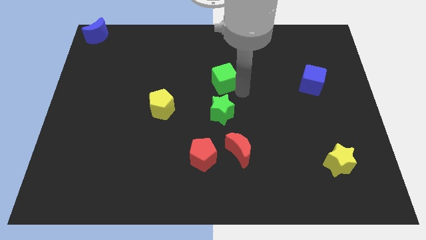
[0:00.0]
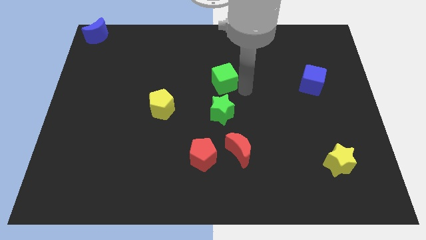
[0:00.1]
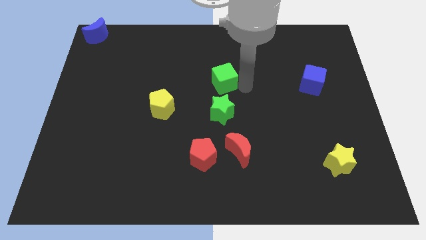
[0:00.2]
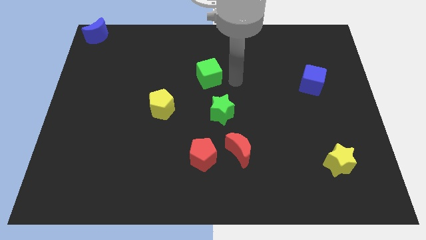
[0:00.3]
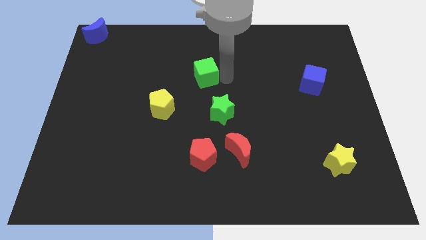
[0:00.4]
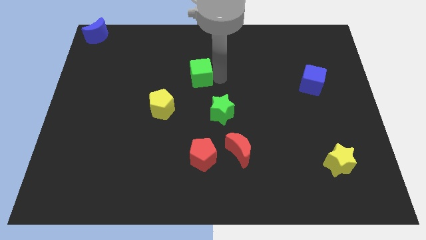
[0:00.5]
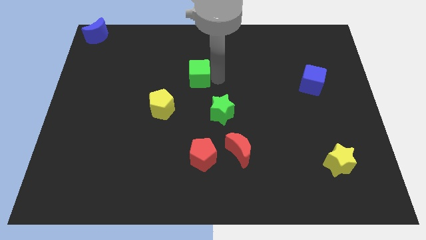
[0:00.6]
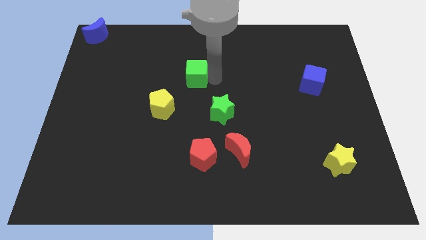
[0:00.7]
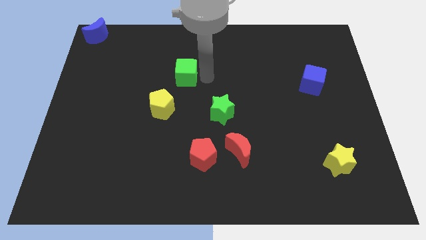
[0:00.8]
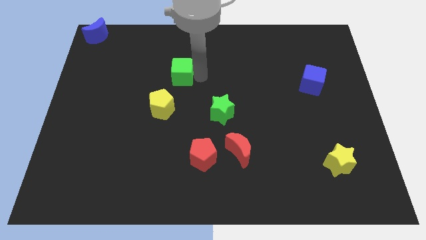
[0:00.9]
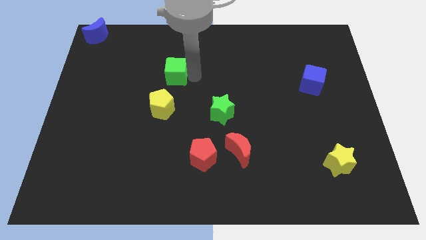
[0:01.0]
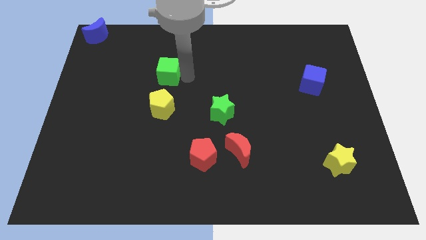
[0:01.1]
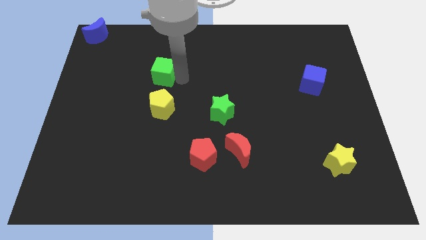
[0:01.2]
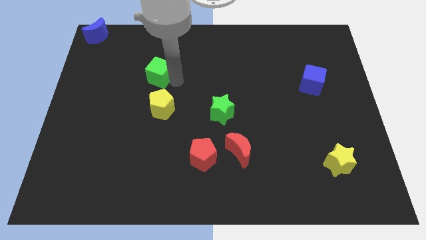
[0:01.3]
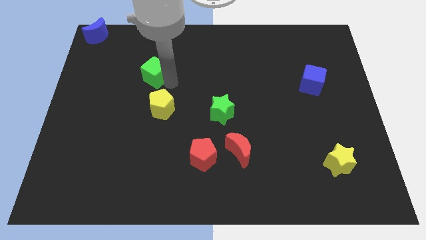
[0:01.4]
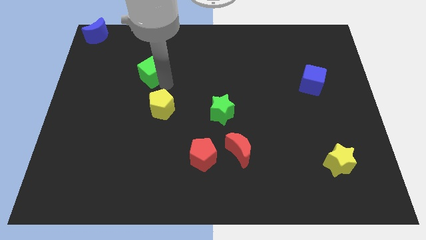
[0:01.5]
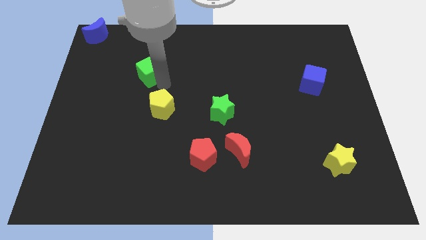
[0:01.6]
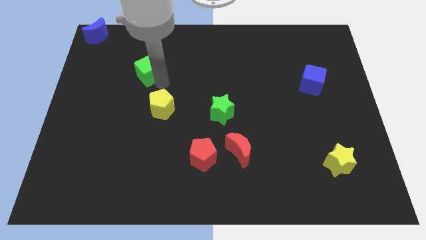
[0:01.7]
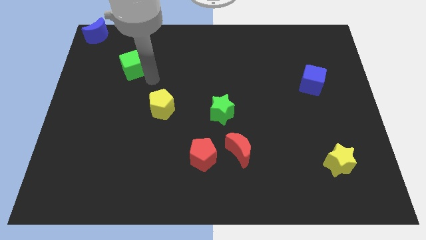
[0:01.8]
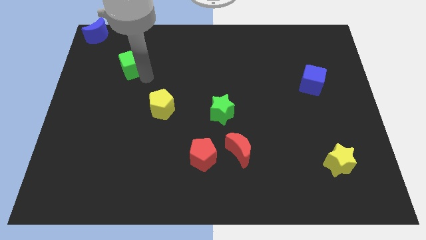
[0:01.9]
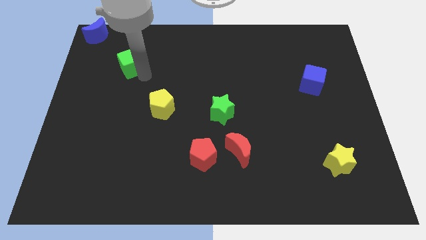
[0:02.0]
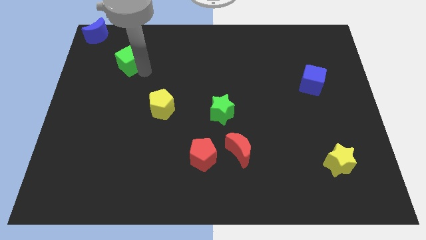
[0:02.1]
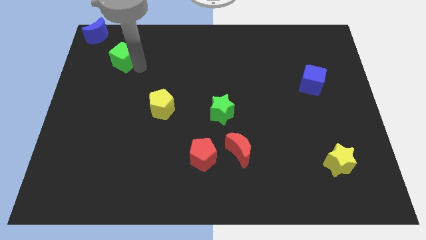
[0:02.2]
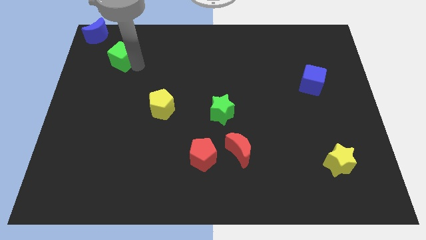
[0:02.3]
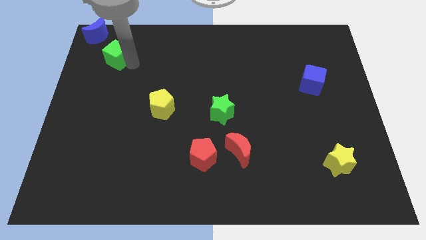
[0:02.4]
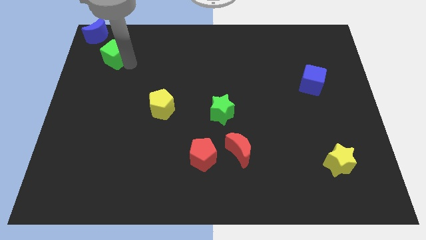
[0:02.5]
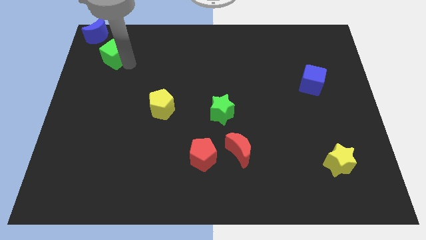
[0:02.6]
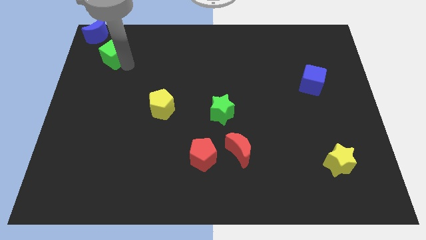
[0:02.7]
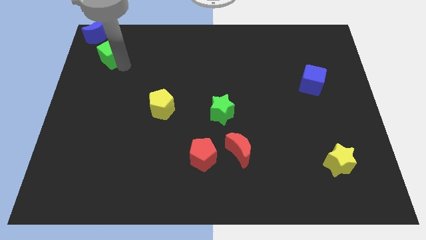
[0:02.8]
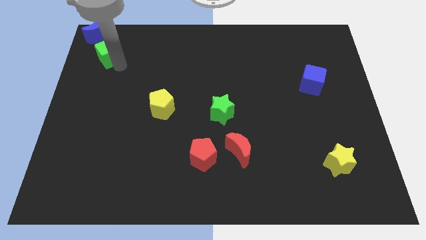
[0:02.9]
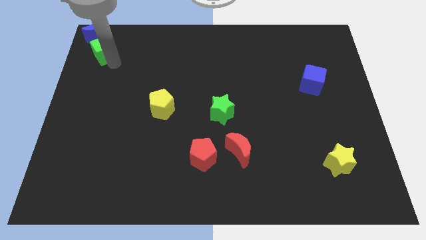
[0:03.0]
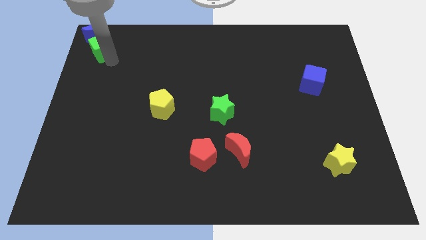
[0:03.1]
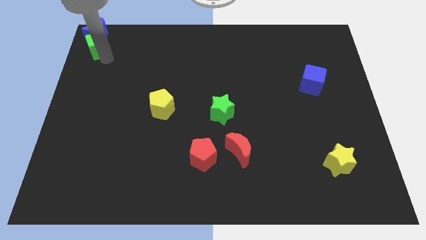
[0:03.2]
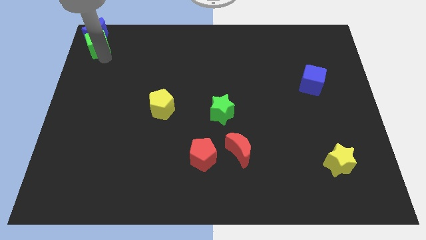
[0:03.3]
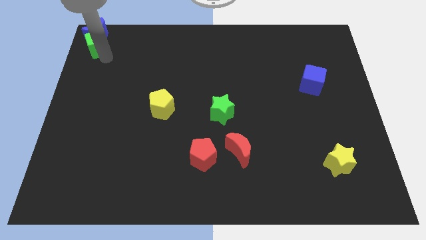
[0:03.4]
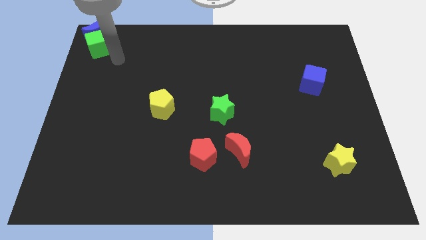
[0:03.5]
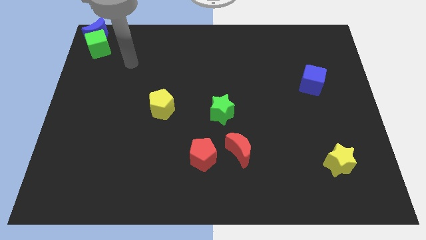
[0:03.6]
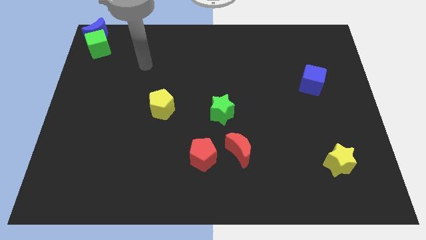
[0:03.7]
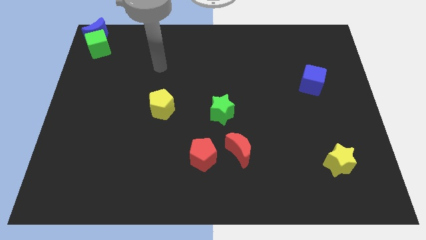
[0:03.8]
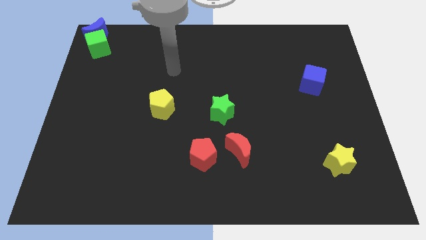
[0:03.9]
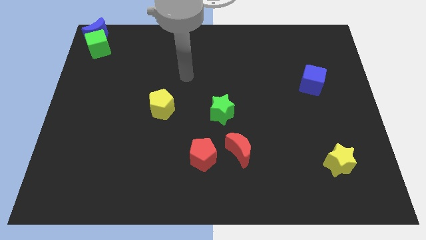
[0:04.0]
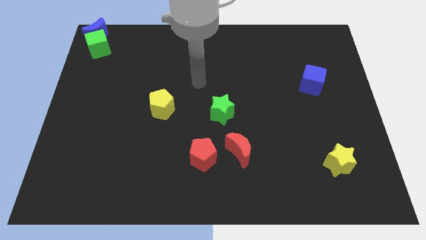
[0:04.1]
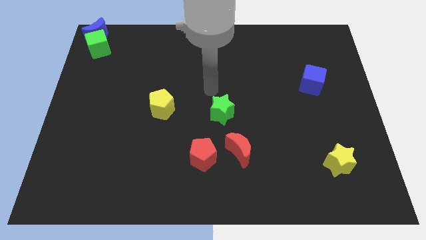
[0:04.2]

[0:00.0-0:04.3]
push the green cube close to the blue crescent

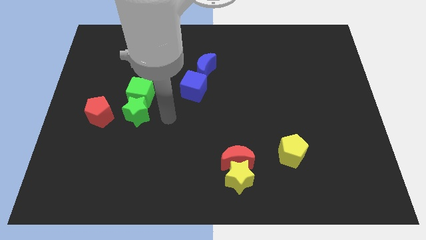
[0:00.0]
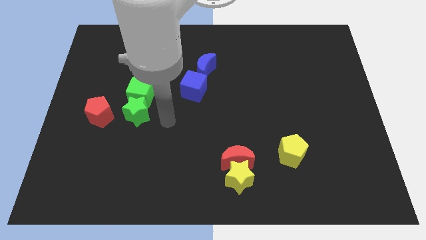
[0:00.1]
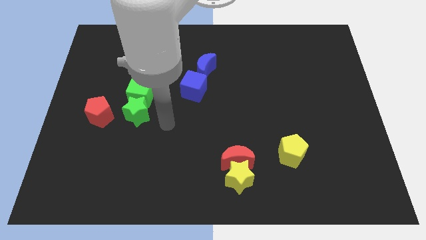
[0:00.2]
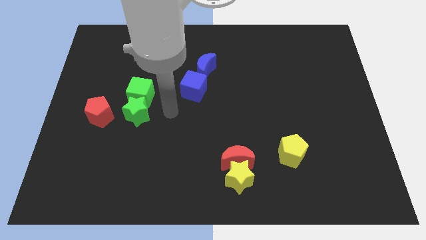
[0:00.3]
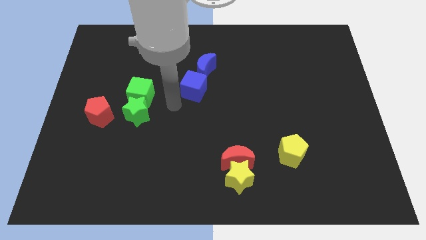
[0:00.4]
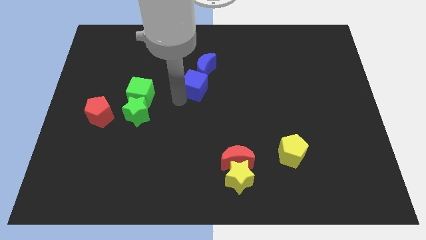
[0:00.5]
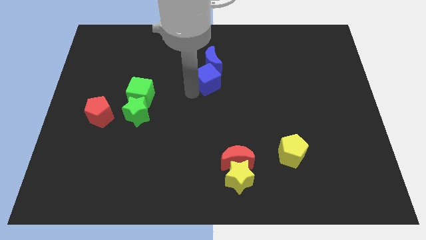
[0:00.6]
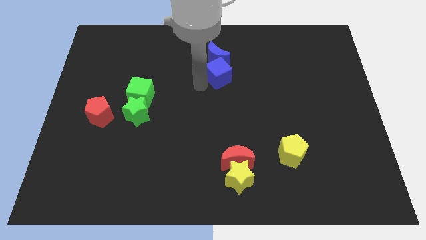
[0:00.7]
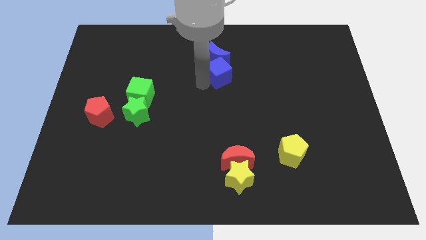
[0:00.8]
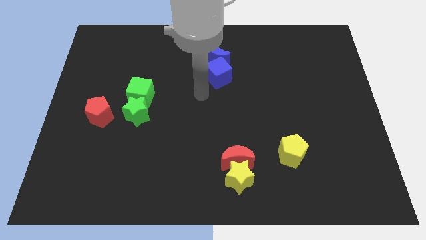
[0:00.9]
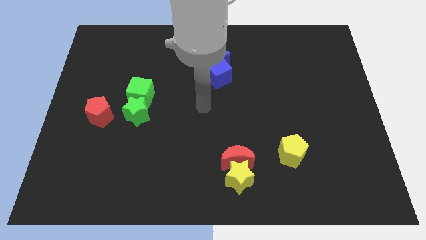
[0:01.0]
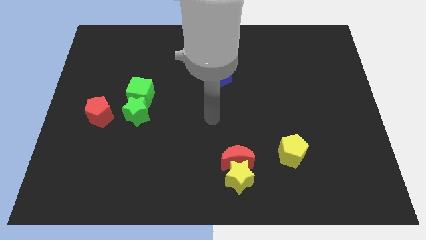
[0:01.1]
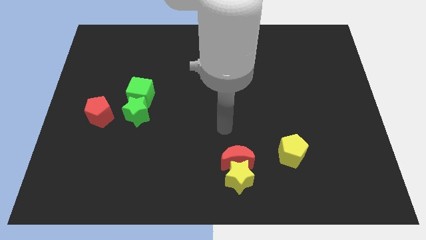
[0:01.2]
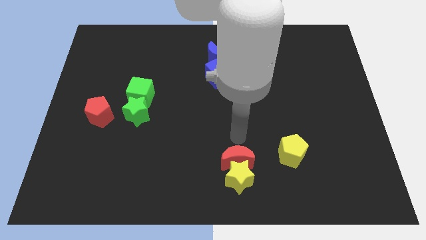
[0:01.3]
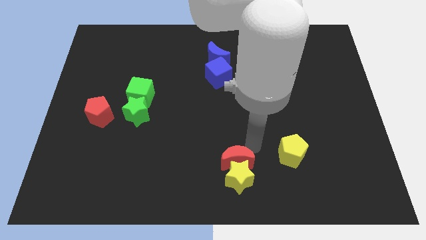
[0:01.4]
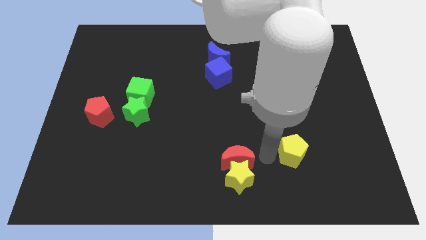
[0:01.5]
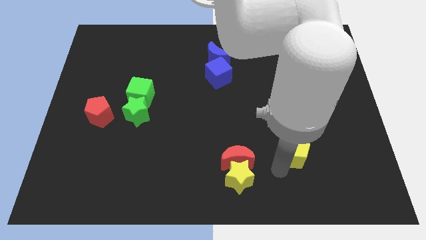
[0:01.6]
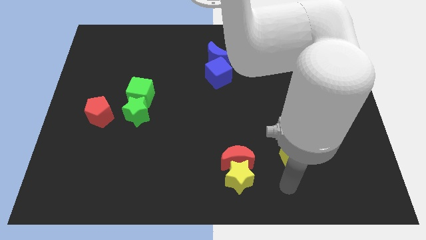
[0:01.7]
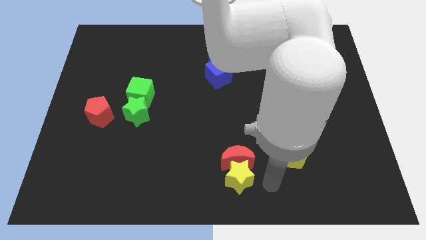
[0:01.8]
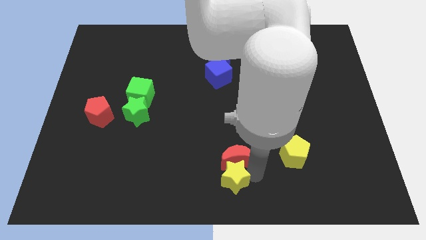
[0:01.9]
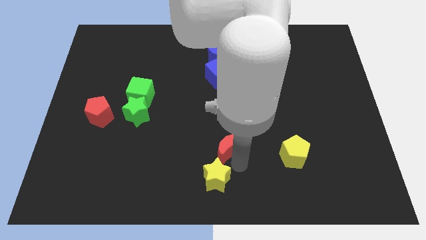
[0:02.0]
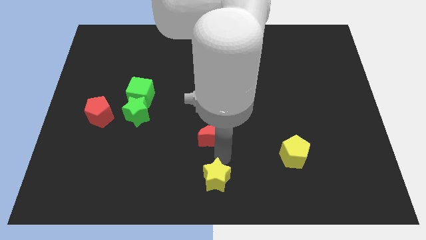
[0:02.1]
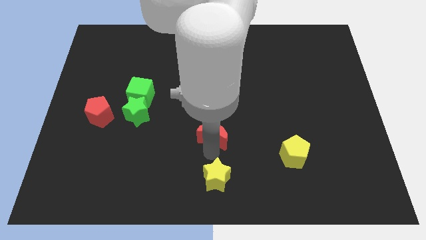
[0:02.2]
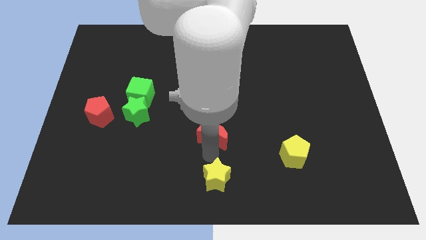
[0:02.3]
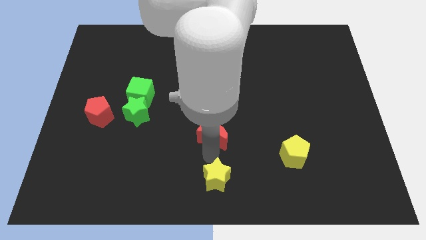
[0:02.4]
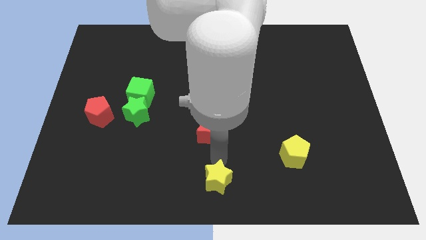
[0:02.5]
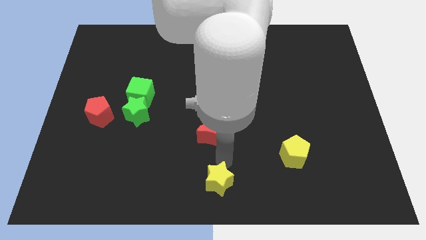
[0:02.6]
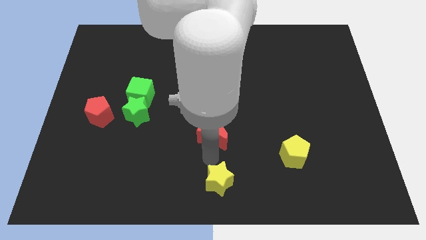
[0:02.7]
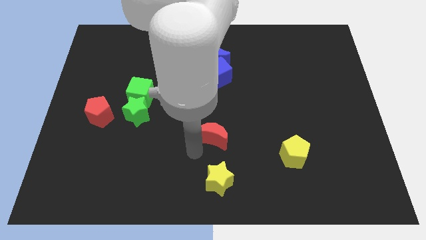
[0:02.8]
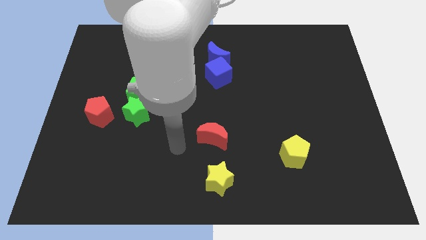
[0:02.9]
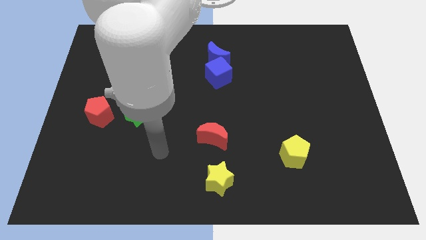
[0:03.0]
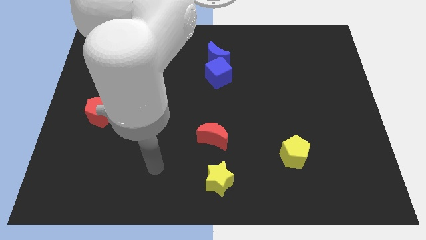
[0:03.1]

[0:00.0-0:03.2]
separate yellow star and red crescent

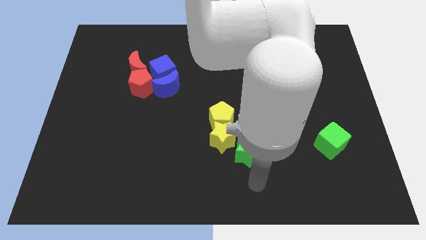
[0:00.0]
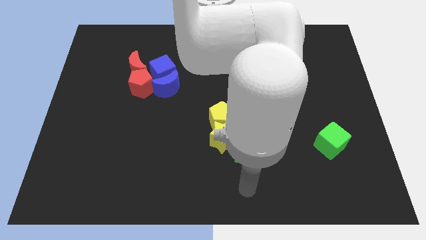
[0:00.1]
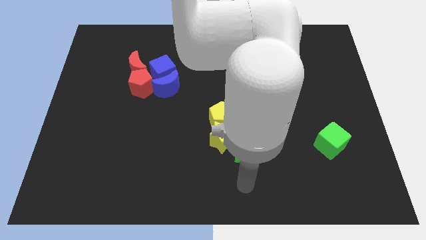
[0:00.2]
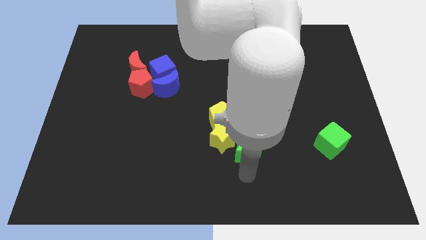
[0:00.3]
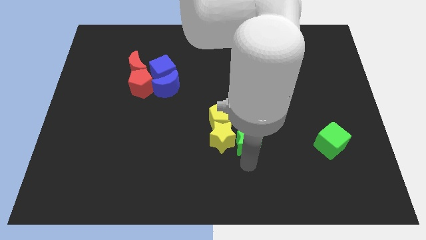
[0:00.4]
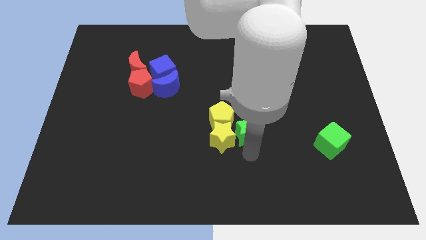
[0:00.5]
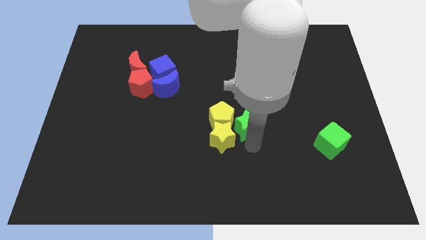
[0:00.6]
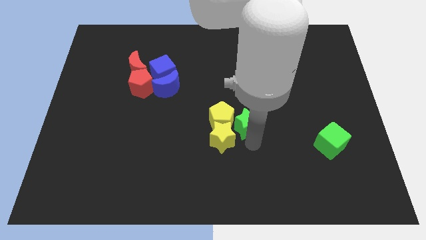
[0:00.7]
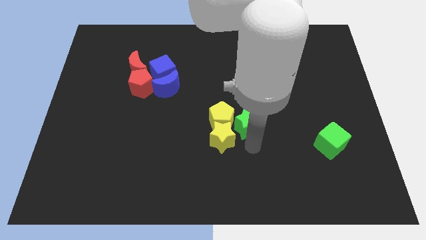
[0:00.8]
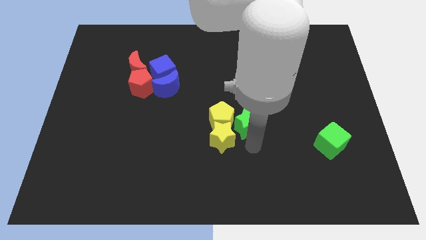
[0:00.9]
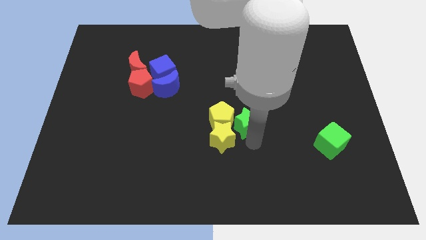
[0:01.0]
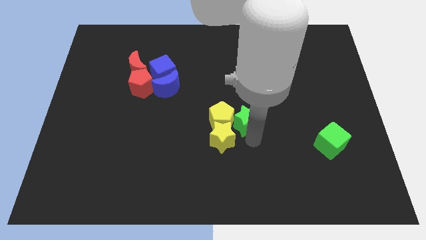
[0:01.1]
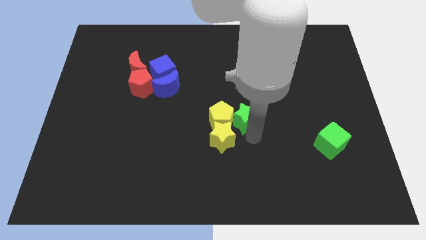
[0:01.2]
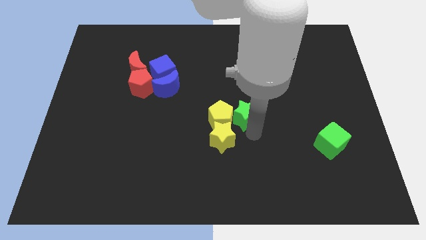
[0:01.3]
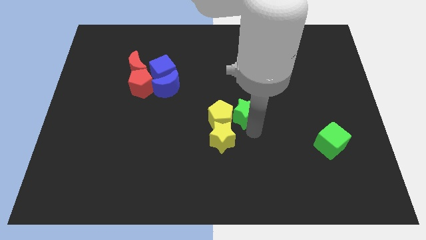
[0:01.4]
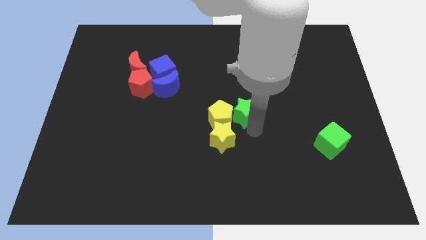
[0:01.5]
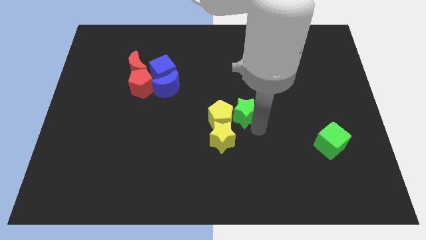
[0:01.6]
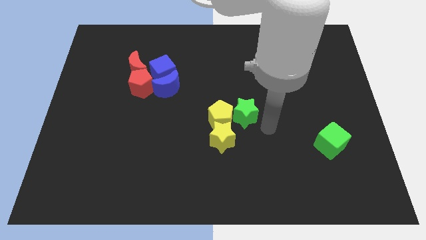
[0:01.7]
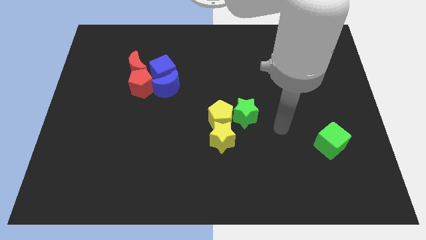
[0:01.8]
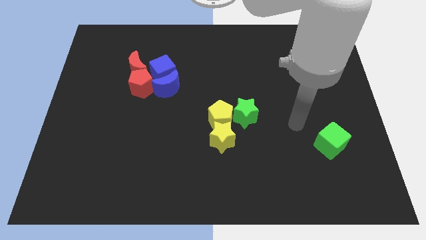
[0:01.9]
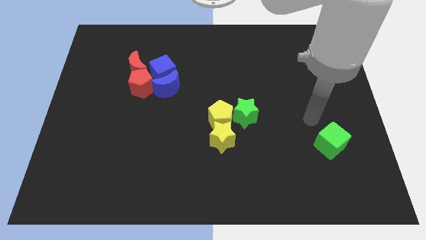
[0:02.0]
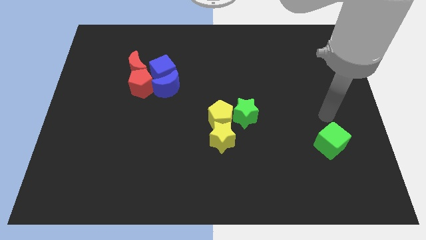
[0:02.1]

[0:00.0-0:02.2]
move the green star to the right of the yellow pentagon
